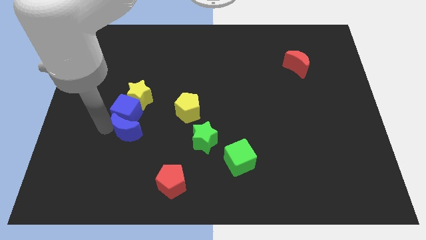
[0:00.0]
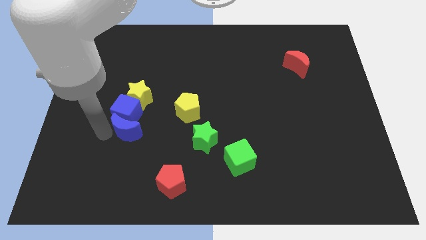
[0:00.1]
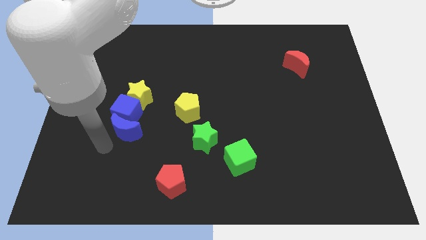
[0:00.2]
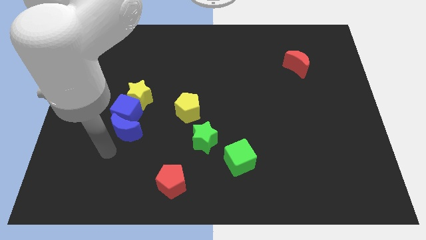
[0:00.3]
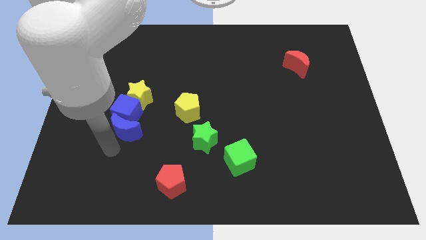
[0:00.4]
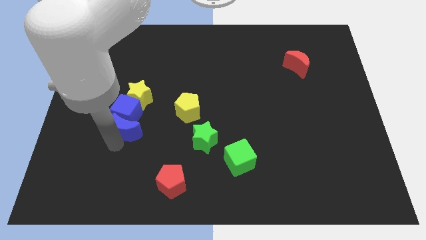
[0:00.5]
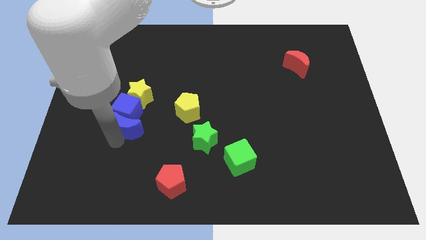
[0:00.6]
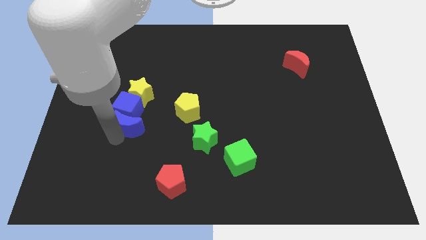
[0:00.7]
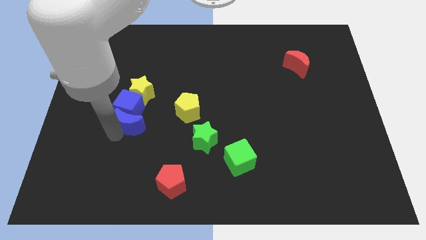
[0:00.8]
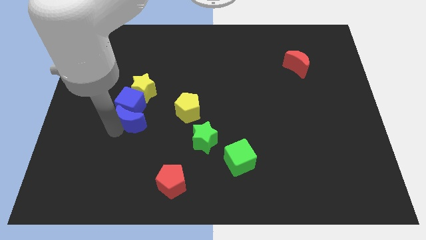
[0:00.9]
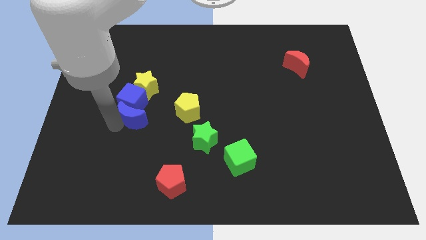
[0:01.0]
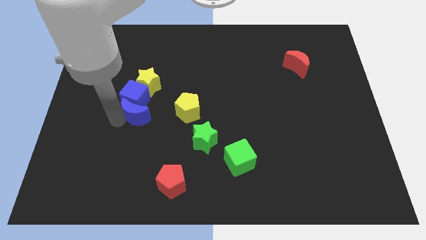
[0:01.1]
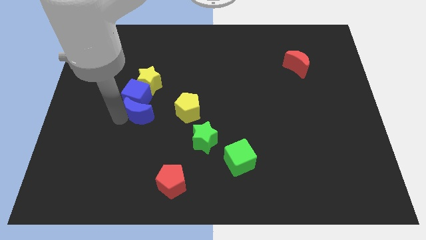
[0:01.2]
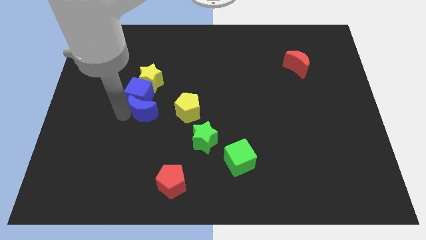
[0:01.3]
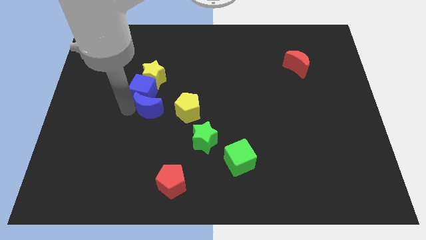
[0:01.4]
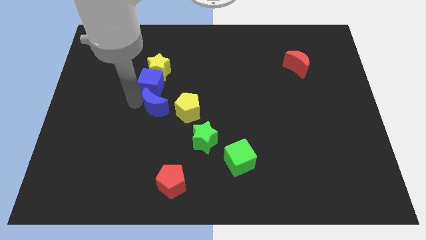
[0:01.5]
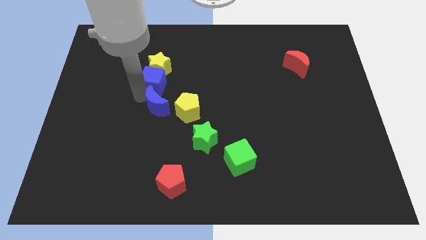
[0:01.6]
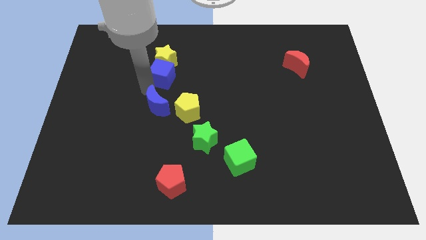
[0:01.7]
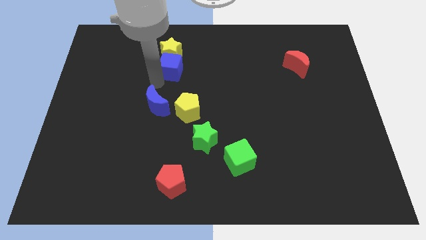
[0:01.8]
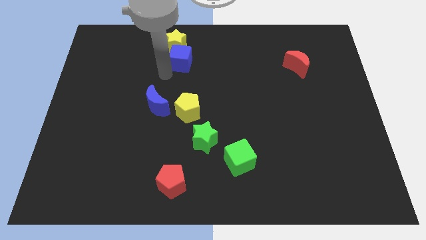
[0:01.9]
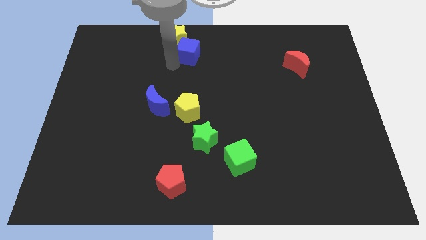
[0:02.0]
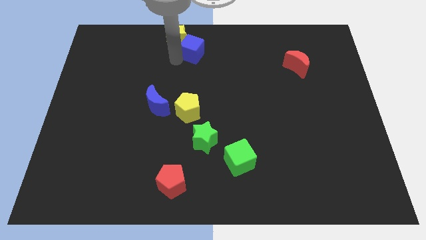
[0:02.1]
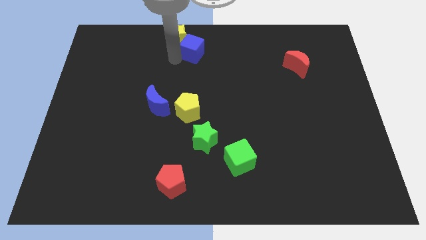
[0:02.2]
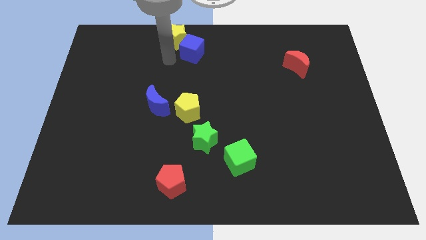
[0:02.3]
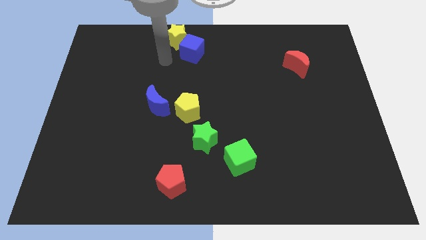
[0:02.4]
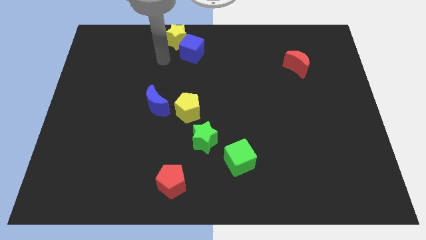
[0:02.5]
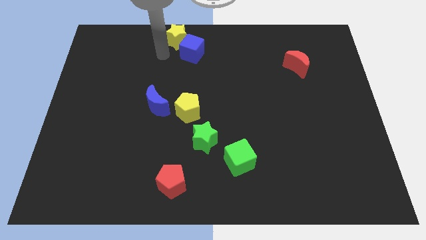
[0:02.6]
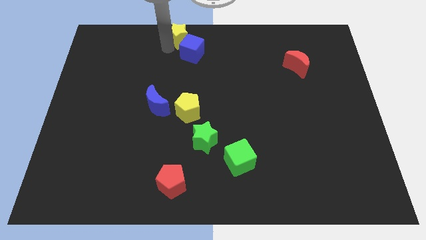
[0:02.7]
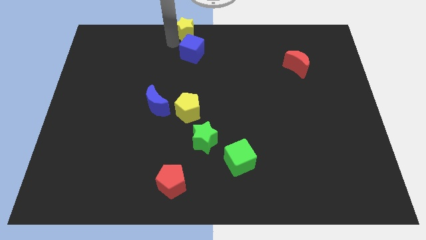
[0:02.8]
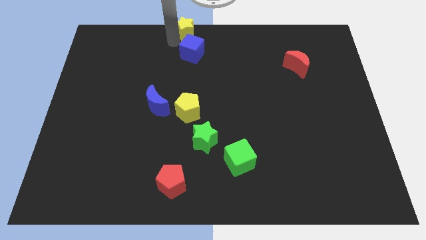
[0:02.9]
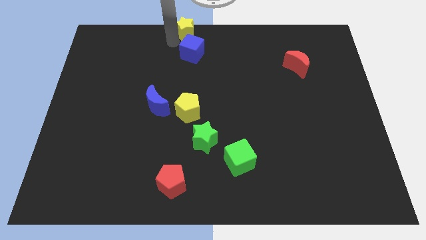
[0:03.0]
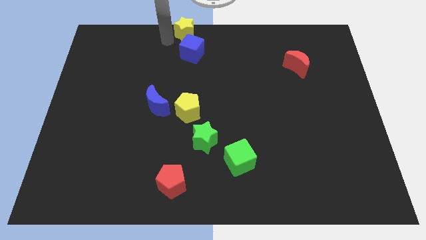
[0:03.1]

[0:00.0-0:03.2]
move the blue cube and yellow star to the center top

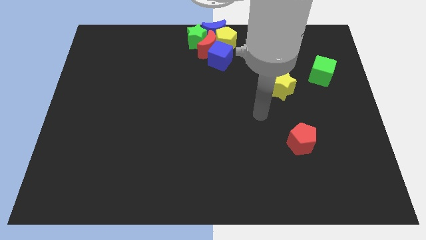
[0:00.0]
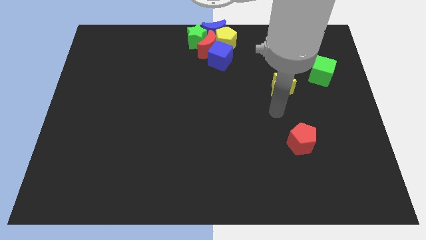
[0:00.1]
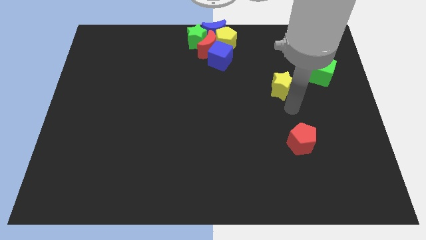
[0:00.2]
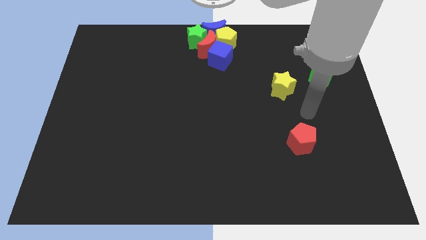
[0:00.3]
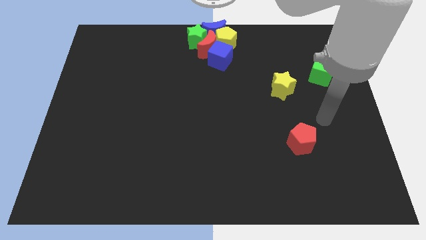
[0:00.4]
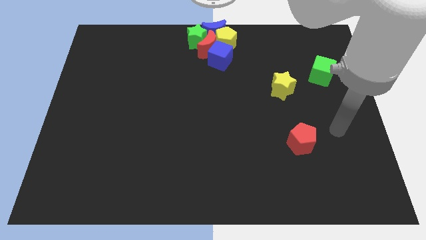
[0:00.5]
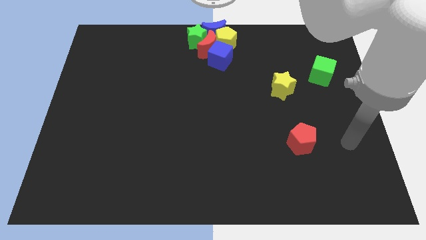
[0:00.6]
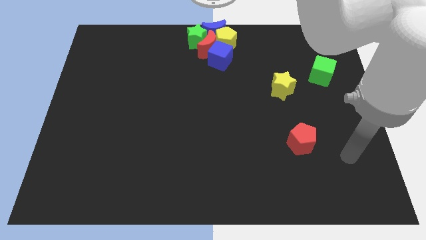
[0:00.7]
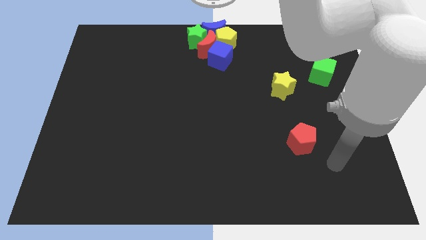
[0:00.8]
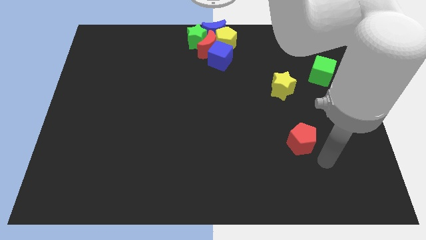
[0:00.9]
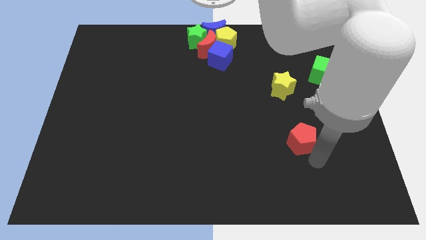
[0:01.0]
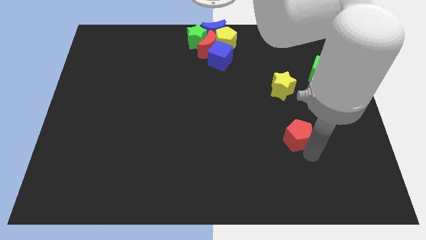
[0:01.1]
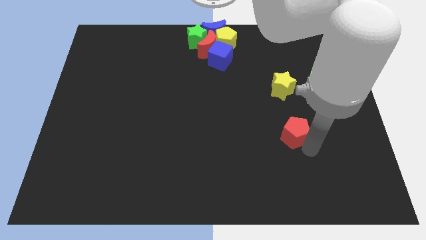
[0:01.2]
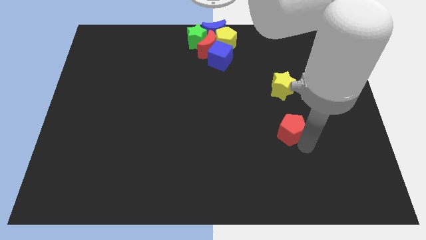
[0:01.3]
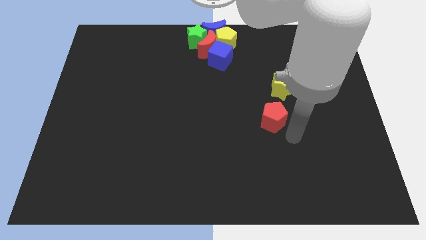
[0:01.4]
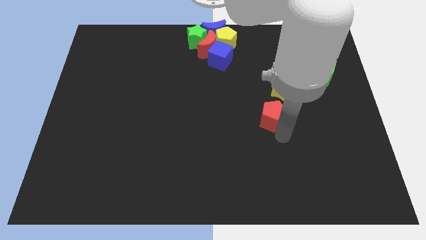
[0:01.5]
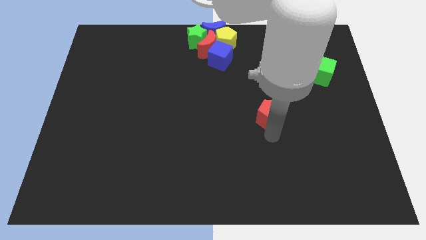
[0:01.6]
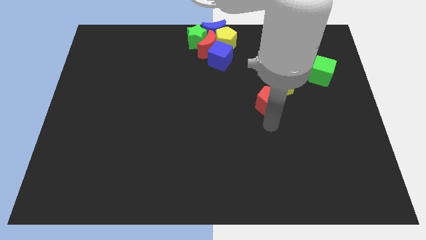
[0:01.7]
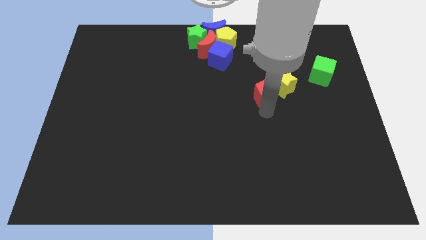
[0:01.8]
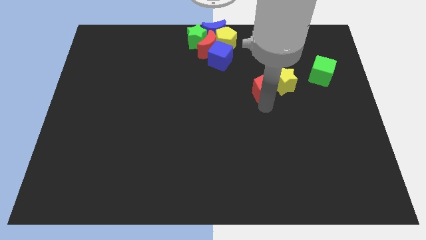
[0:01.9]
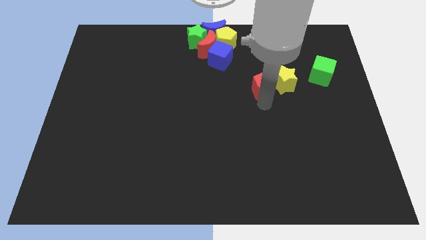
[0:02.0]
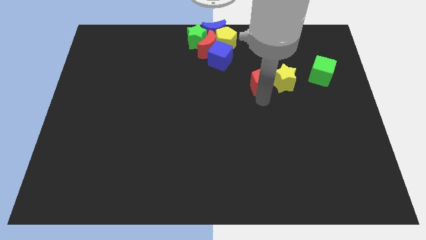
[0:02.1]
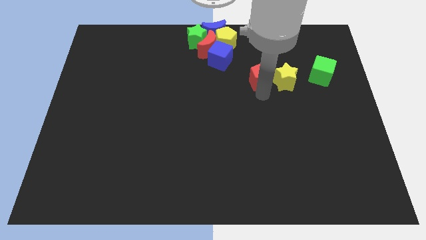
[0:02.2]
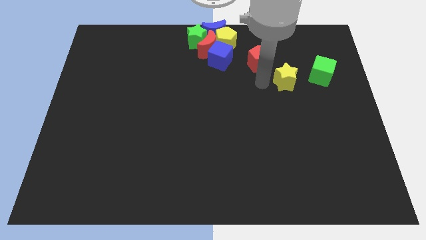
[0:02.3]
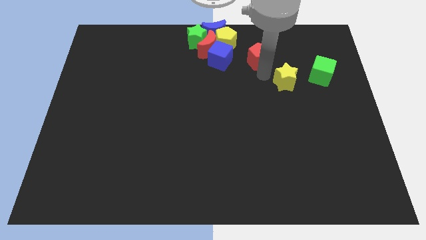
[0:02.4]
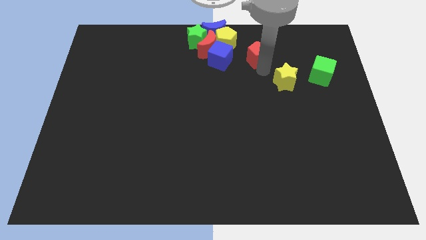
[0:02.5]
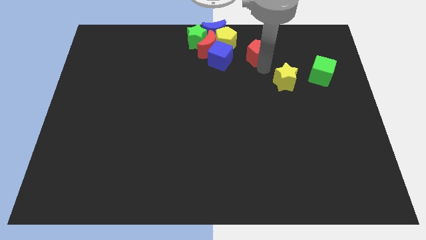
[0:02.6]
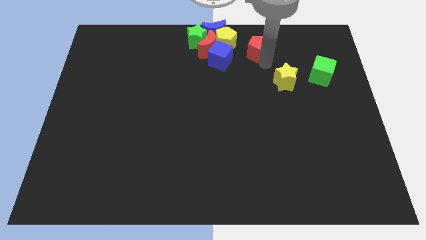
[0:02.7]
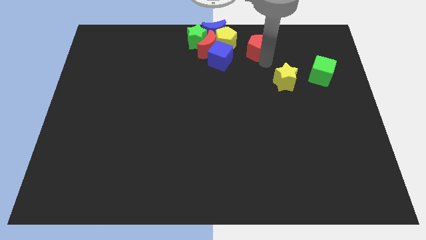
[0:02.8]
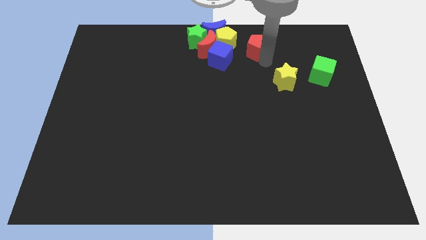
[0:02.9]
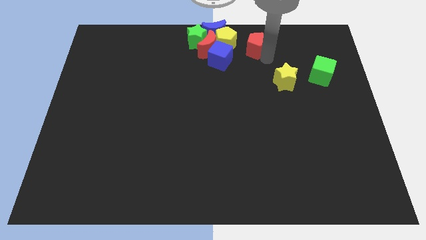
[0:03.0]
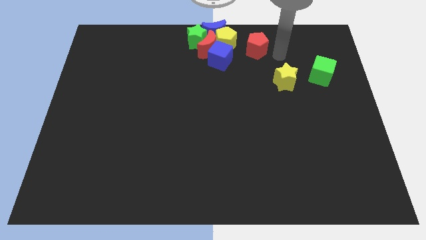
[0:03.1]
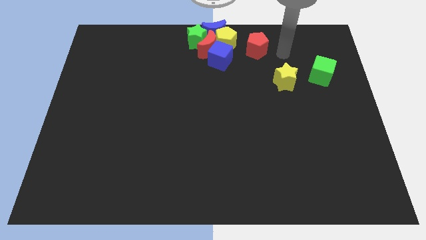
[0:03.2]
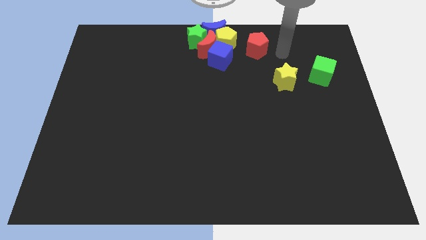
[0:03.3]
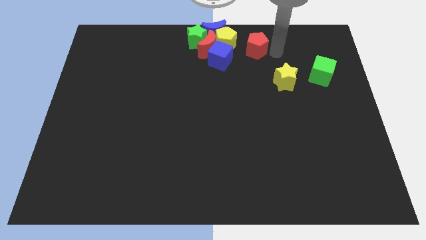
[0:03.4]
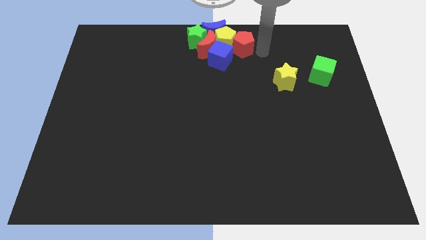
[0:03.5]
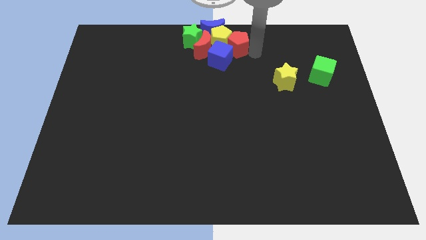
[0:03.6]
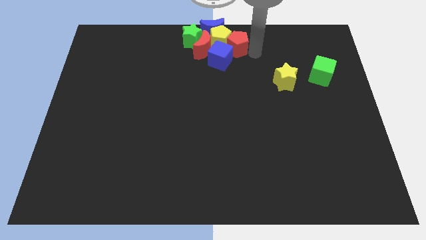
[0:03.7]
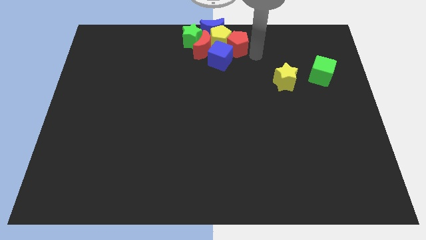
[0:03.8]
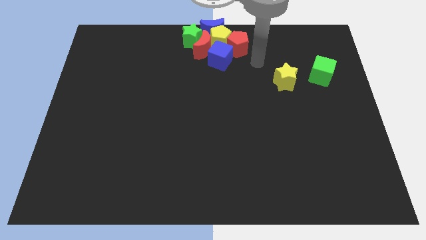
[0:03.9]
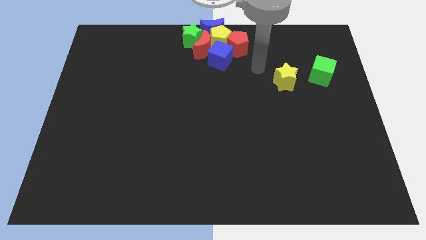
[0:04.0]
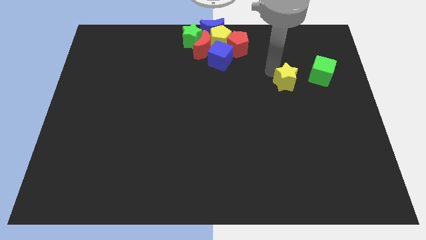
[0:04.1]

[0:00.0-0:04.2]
push the red pentagon into the yellow pentagon

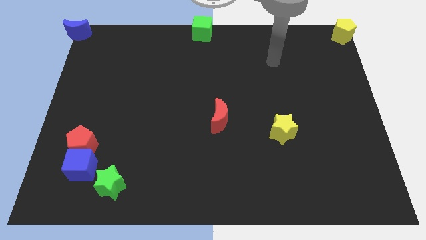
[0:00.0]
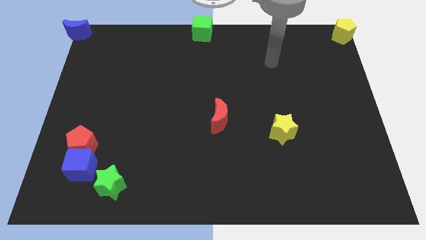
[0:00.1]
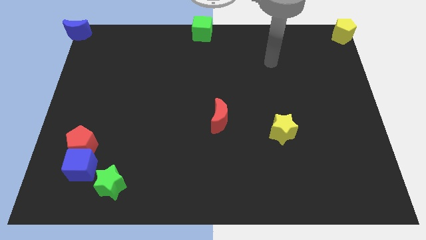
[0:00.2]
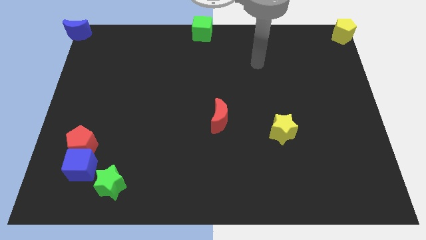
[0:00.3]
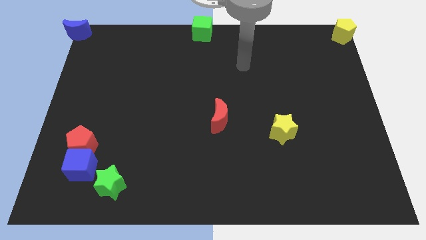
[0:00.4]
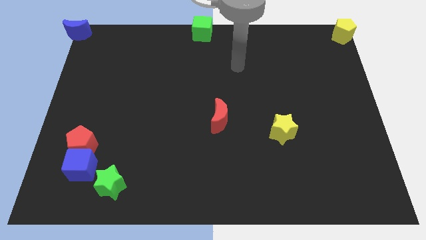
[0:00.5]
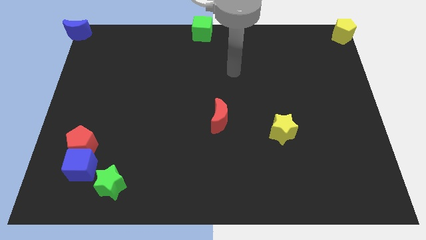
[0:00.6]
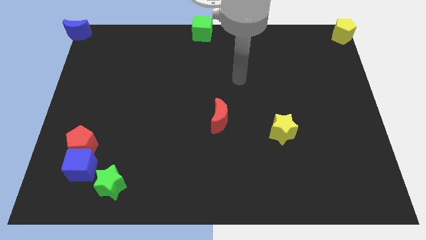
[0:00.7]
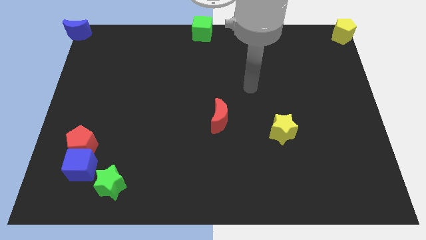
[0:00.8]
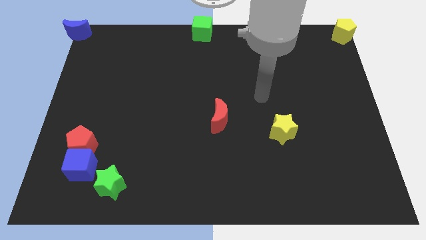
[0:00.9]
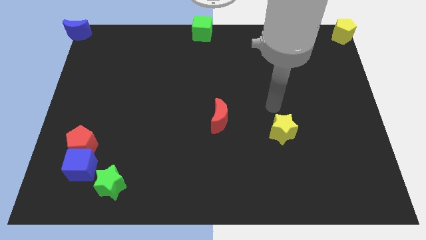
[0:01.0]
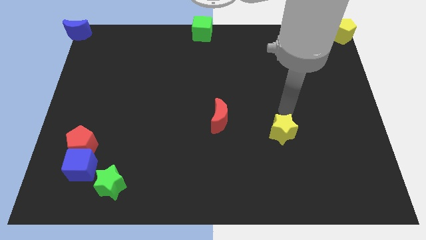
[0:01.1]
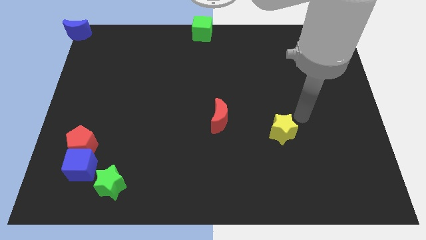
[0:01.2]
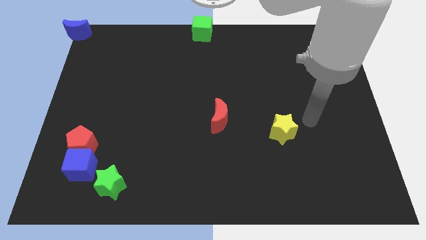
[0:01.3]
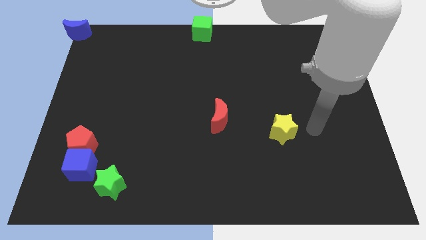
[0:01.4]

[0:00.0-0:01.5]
move your arm to the right side of the yellow star
